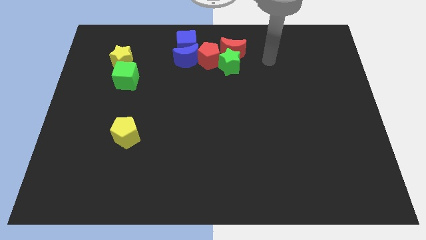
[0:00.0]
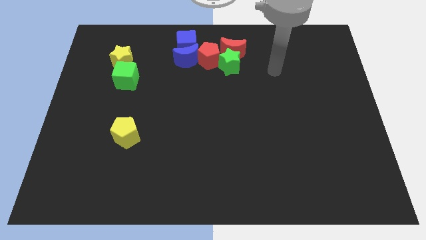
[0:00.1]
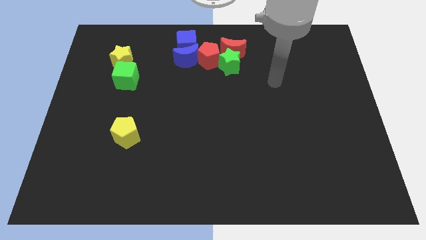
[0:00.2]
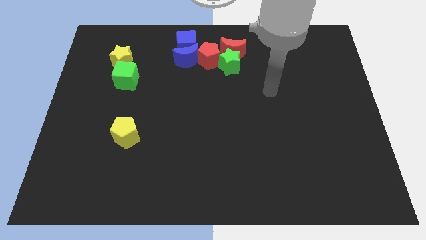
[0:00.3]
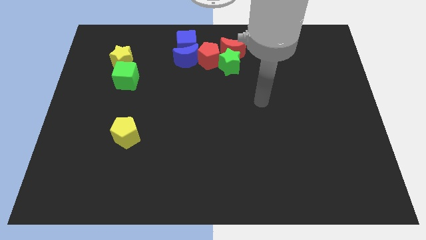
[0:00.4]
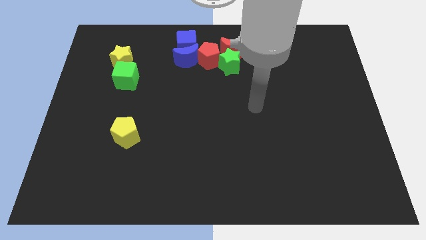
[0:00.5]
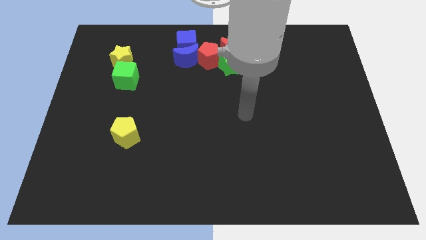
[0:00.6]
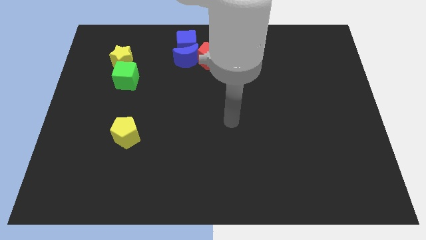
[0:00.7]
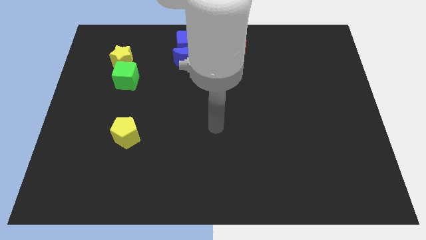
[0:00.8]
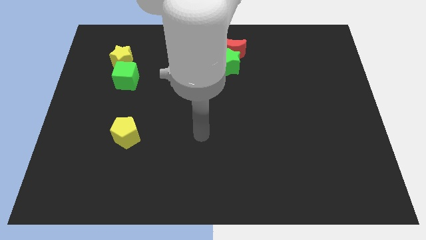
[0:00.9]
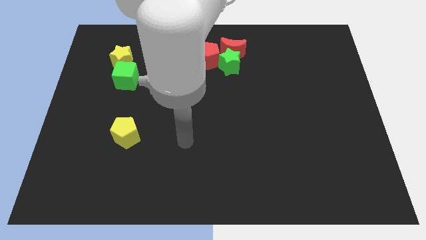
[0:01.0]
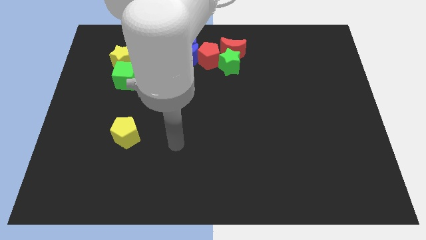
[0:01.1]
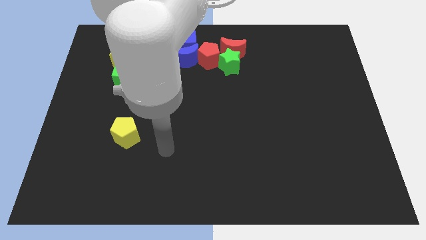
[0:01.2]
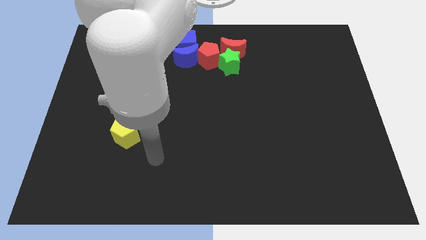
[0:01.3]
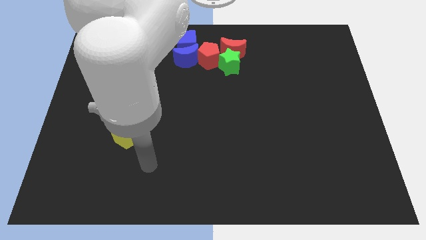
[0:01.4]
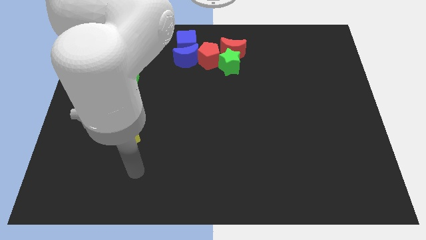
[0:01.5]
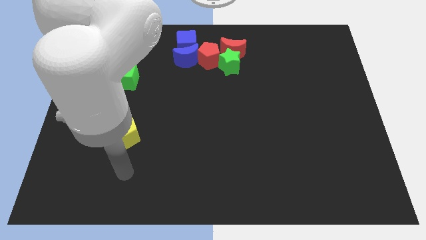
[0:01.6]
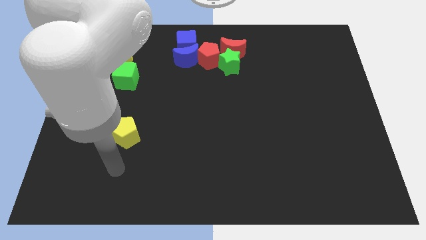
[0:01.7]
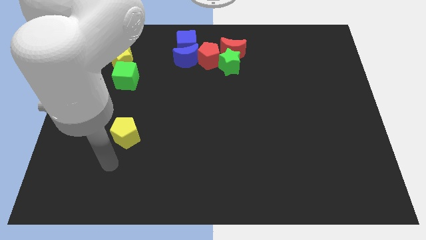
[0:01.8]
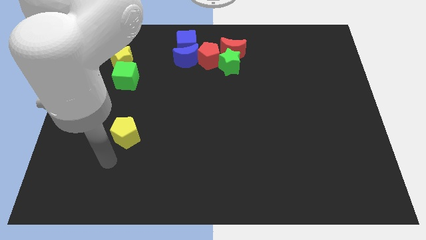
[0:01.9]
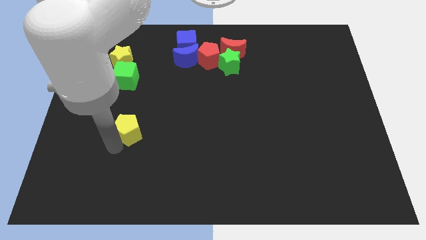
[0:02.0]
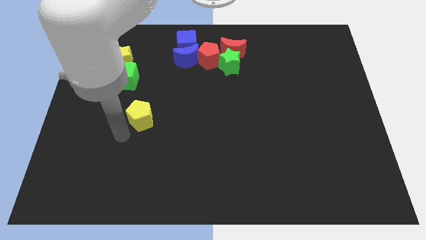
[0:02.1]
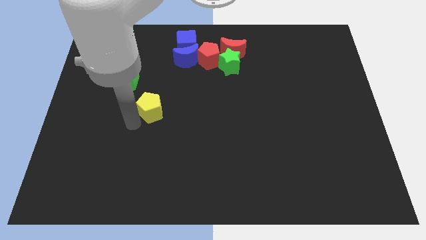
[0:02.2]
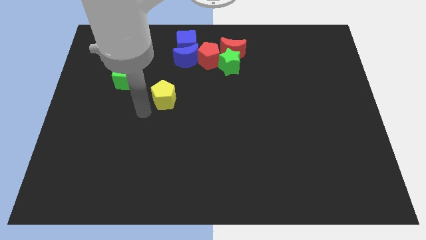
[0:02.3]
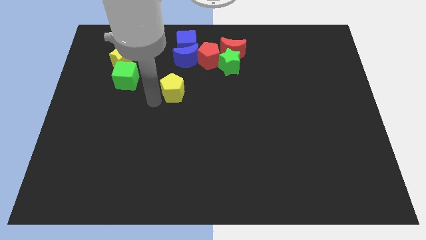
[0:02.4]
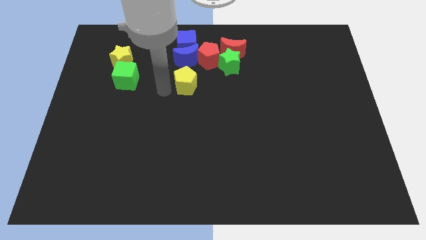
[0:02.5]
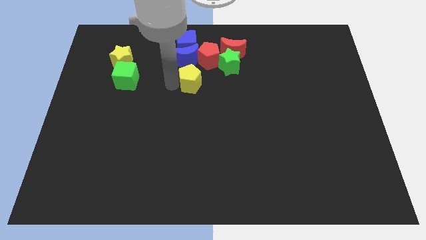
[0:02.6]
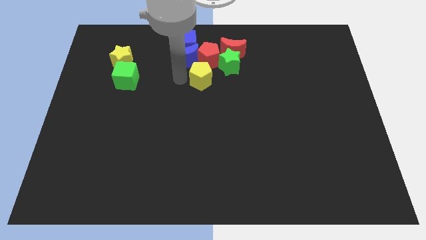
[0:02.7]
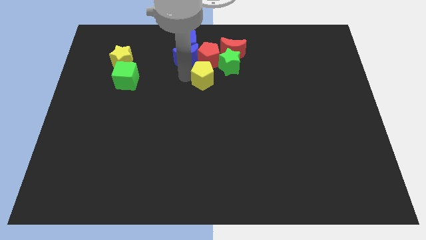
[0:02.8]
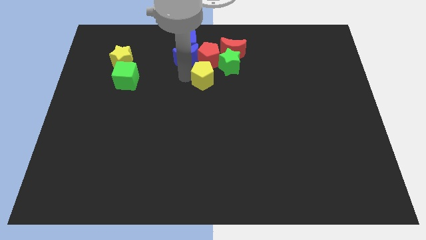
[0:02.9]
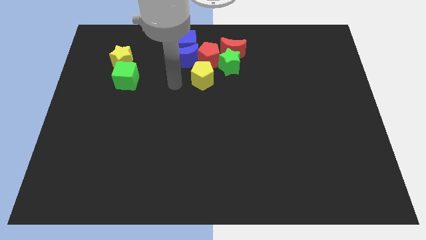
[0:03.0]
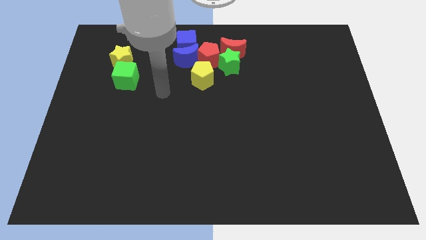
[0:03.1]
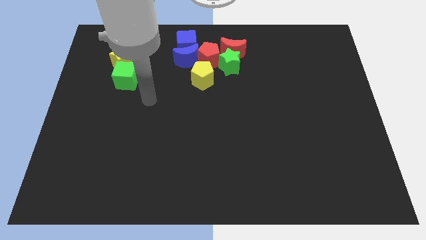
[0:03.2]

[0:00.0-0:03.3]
place the yellow pentagon below the red pentagon

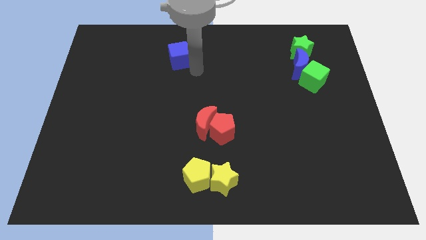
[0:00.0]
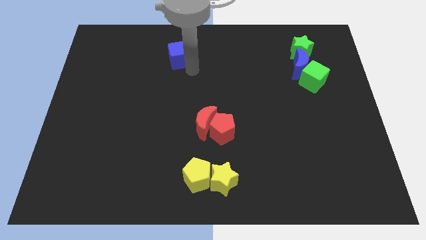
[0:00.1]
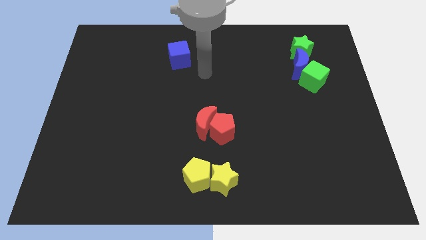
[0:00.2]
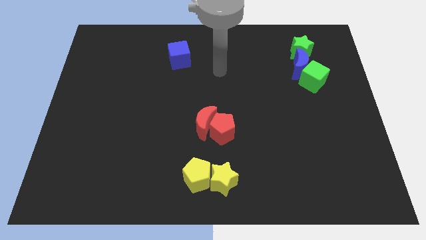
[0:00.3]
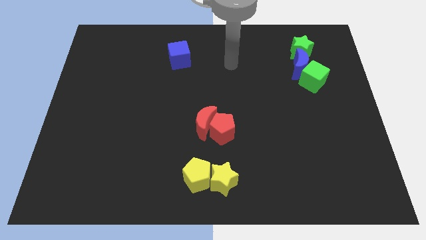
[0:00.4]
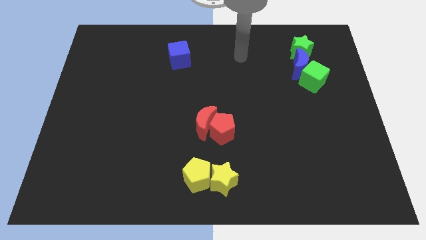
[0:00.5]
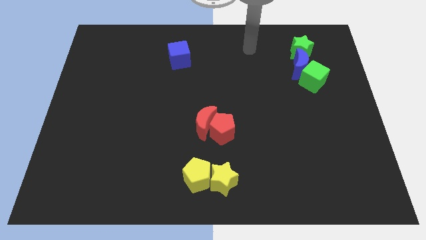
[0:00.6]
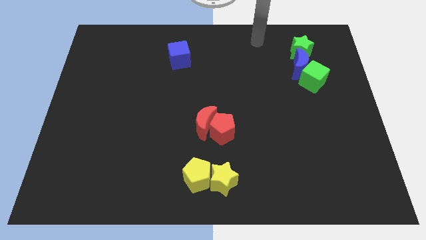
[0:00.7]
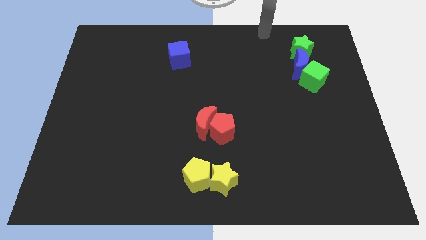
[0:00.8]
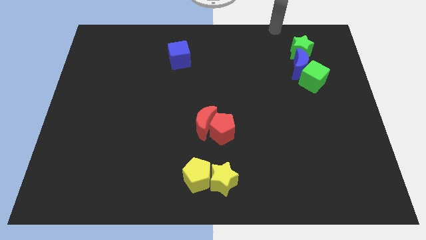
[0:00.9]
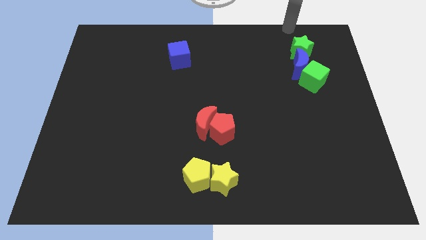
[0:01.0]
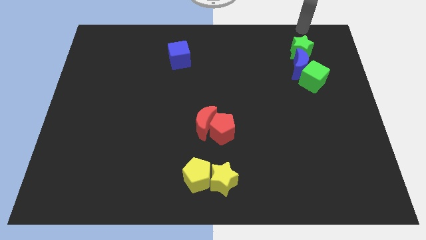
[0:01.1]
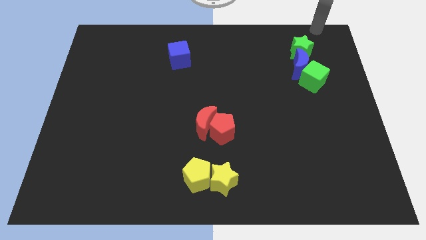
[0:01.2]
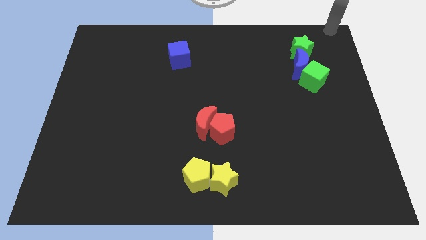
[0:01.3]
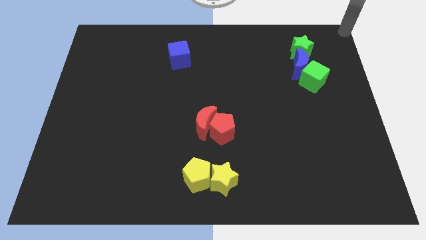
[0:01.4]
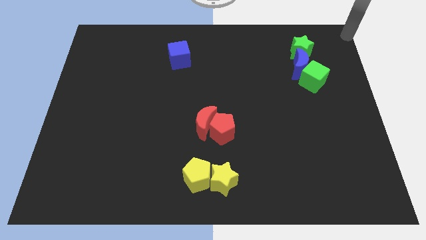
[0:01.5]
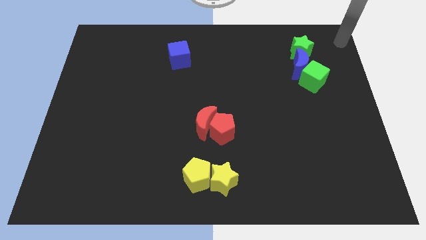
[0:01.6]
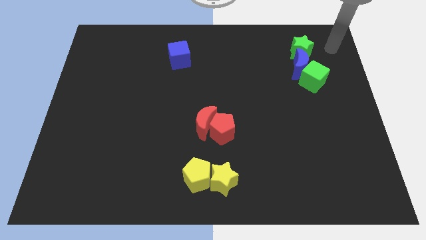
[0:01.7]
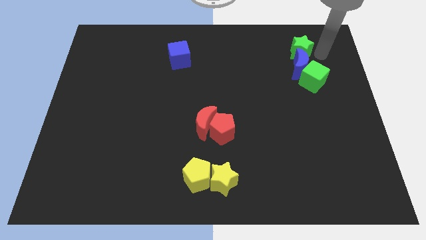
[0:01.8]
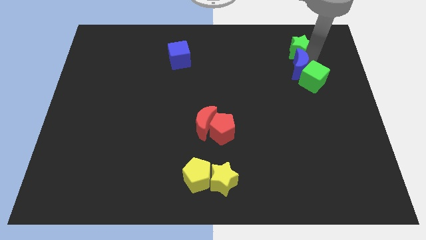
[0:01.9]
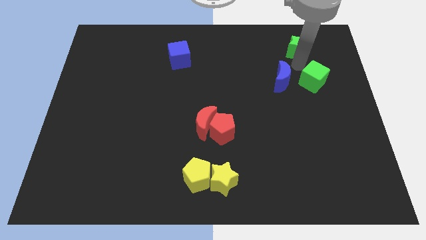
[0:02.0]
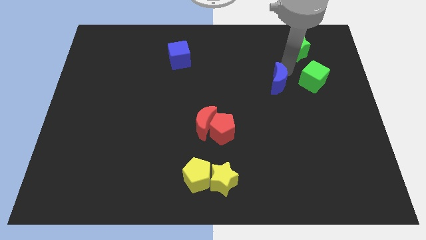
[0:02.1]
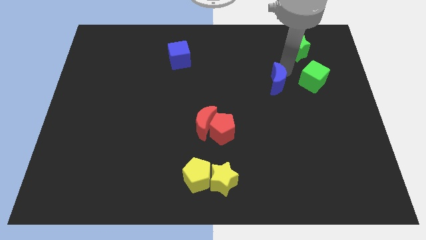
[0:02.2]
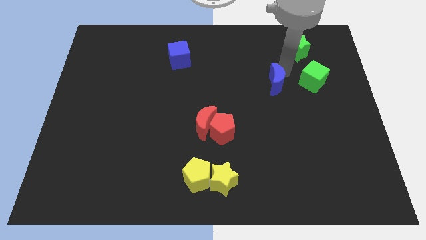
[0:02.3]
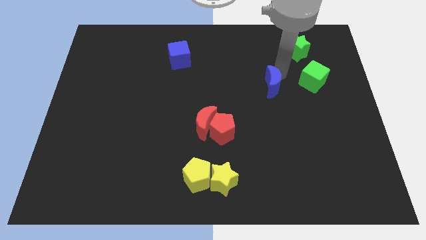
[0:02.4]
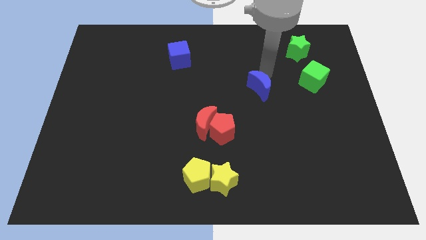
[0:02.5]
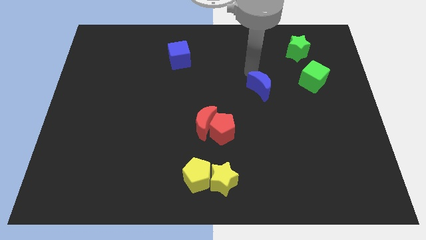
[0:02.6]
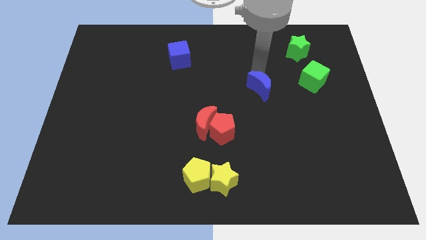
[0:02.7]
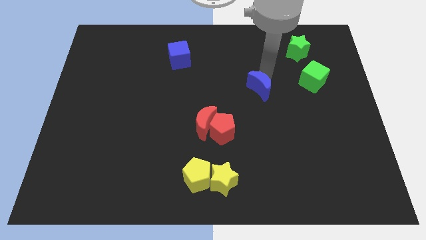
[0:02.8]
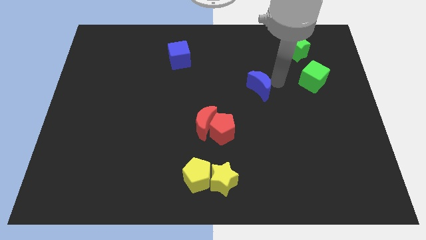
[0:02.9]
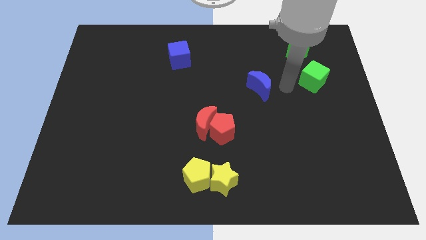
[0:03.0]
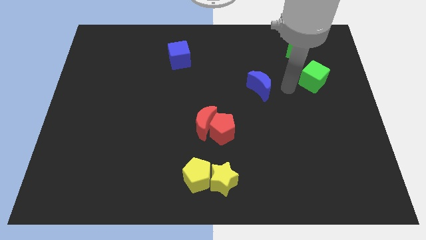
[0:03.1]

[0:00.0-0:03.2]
separate the blue moon from the green blocks

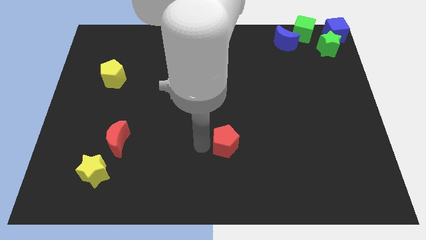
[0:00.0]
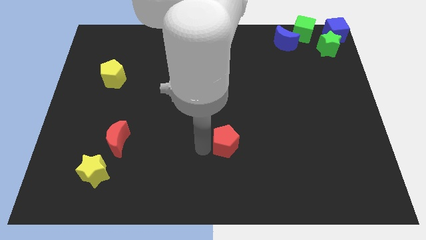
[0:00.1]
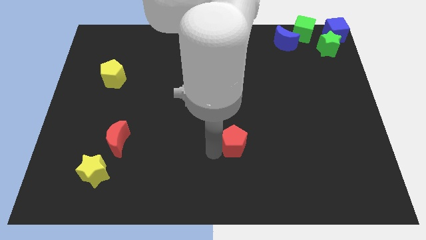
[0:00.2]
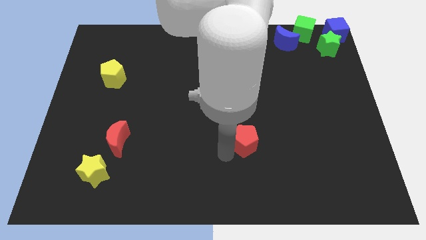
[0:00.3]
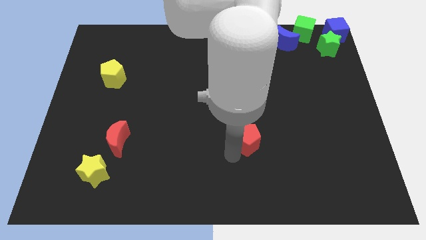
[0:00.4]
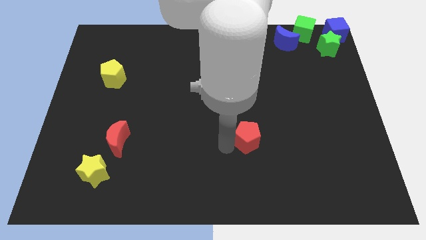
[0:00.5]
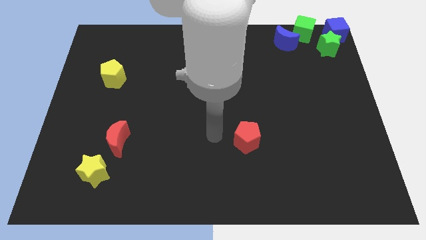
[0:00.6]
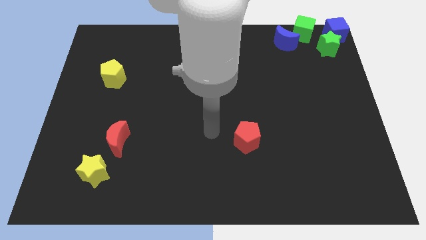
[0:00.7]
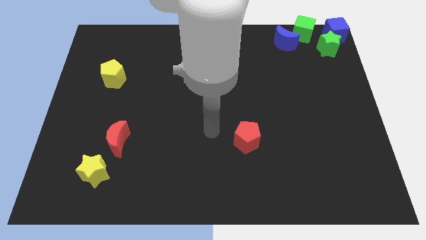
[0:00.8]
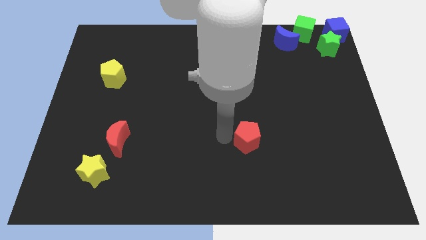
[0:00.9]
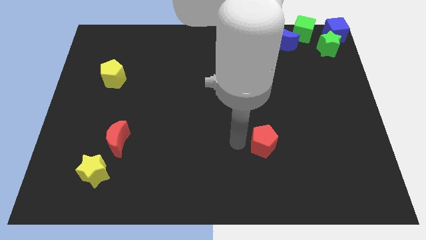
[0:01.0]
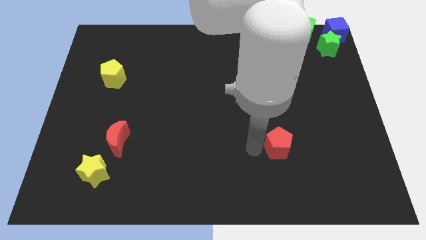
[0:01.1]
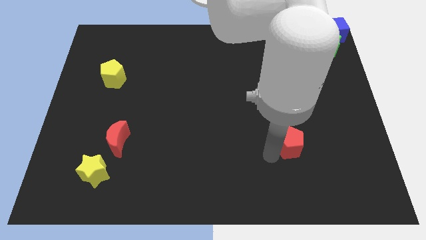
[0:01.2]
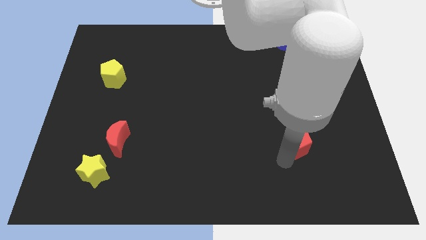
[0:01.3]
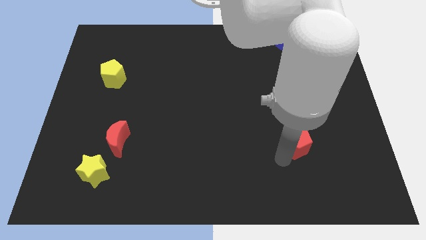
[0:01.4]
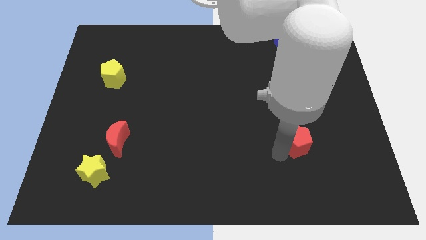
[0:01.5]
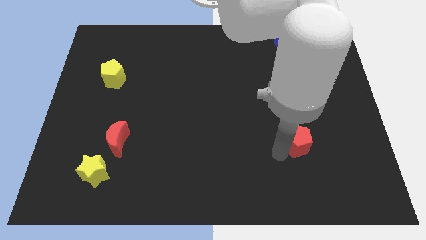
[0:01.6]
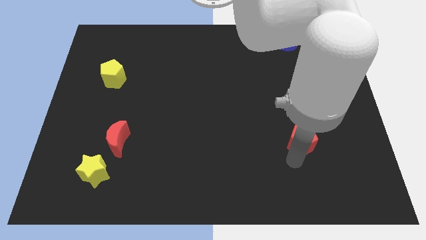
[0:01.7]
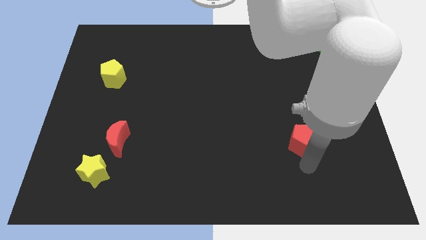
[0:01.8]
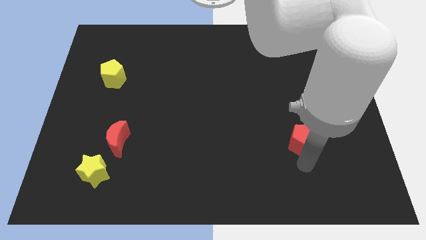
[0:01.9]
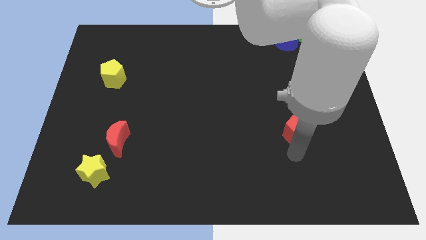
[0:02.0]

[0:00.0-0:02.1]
push the red pentagon towards the right side

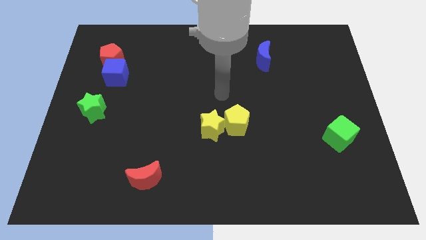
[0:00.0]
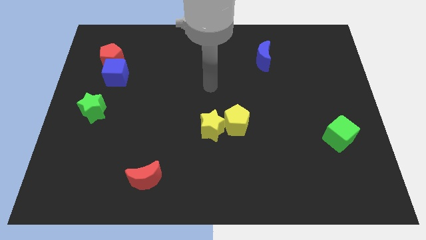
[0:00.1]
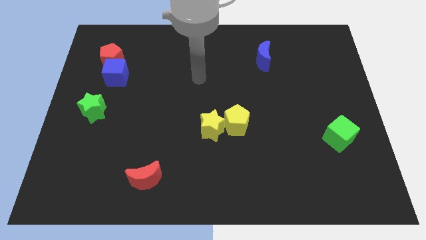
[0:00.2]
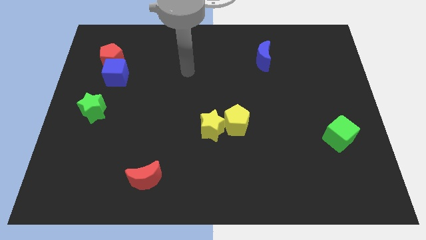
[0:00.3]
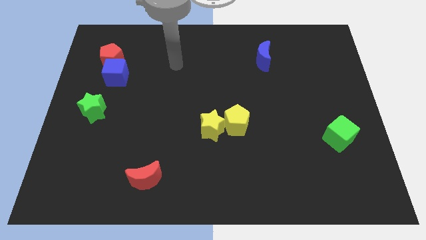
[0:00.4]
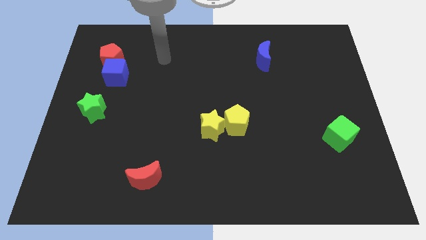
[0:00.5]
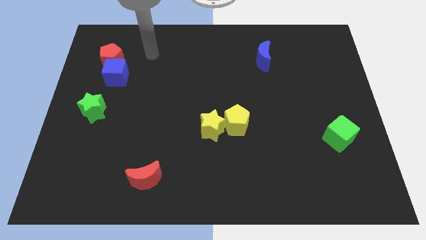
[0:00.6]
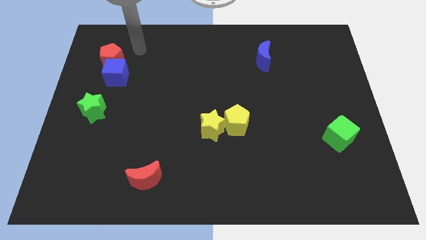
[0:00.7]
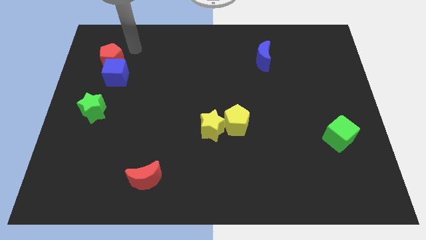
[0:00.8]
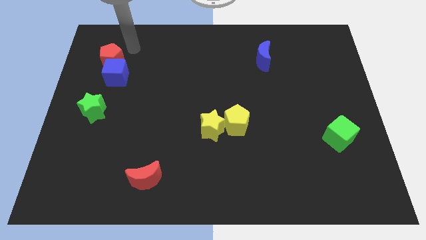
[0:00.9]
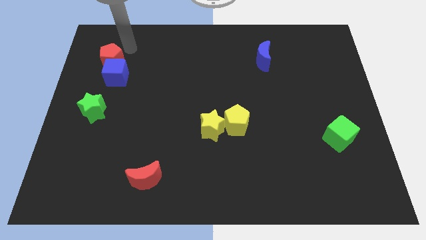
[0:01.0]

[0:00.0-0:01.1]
point the arm to the top right of the red pentagon
